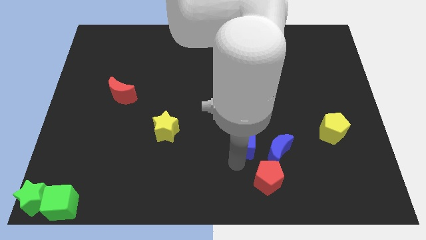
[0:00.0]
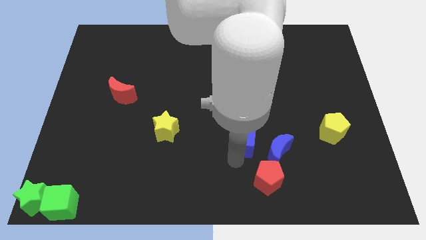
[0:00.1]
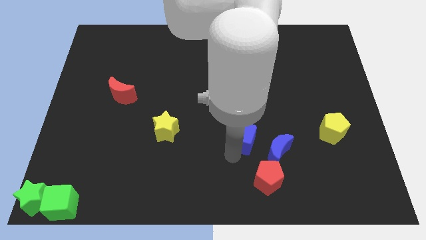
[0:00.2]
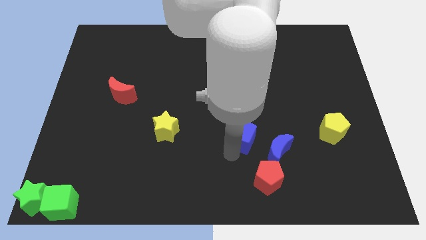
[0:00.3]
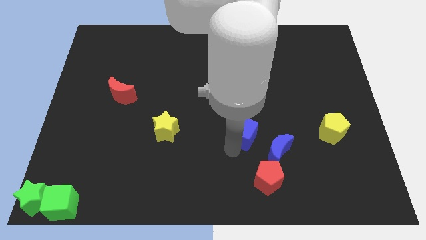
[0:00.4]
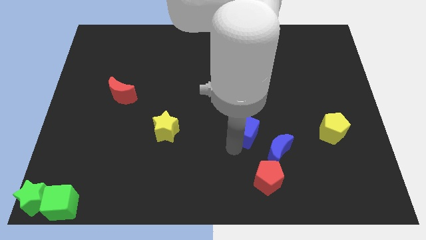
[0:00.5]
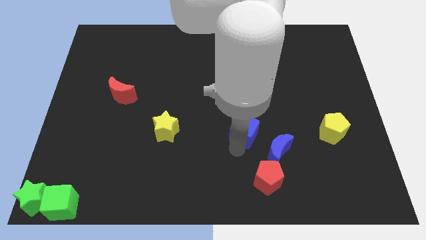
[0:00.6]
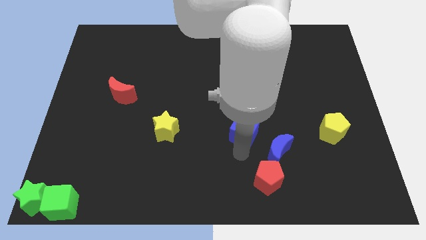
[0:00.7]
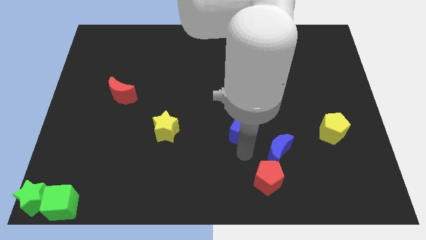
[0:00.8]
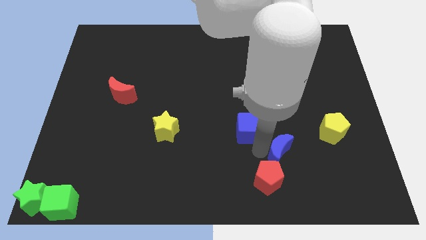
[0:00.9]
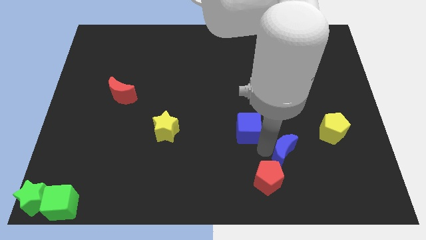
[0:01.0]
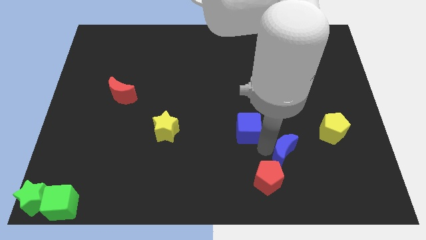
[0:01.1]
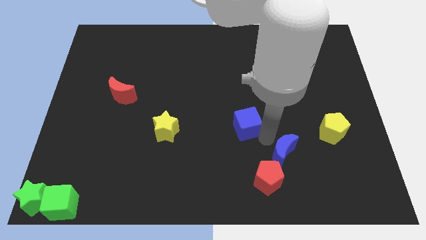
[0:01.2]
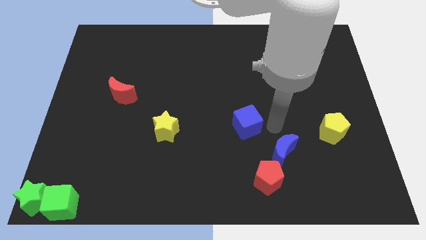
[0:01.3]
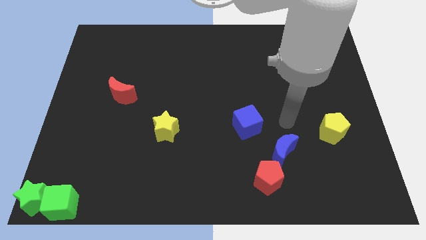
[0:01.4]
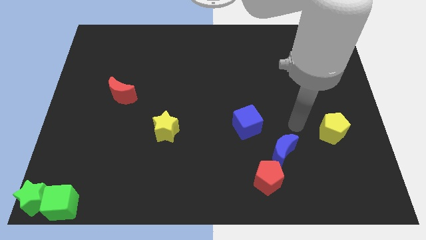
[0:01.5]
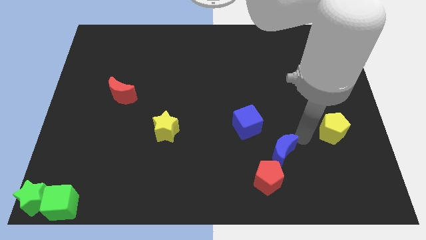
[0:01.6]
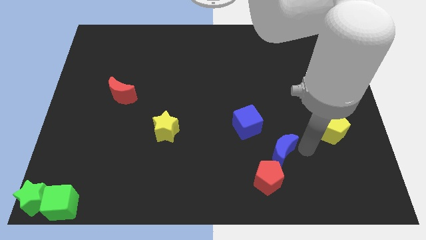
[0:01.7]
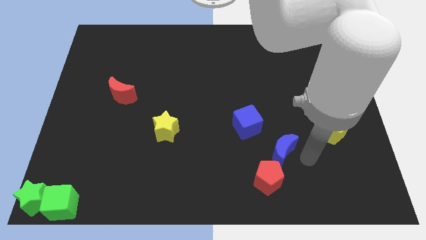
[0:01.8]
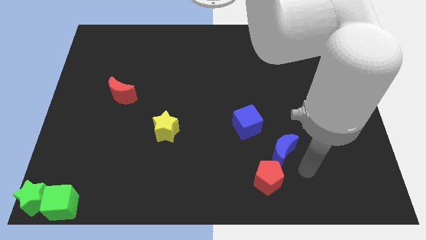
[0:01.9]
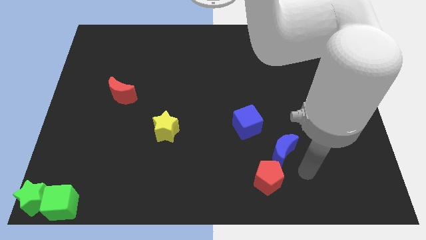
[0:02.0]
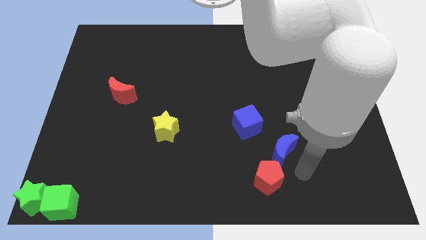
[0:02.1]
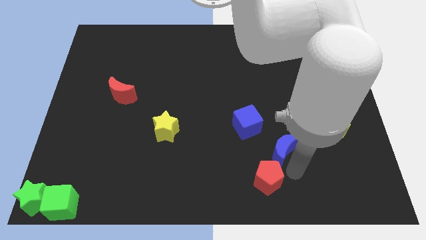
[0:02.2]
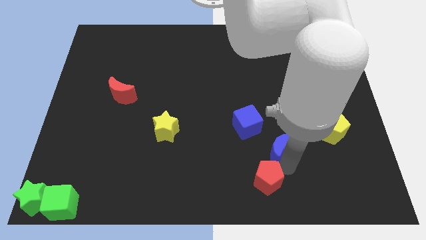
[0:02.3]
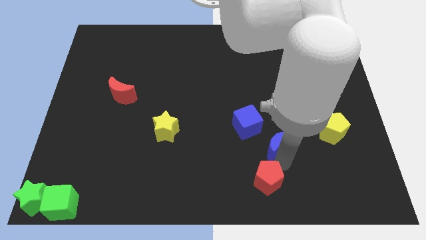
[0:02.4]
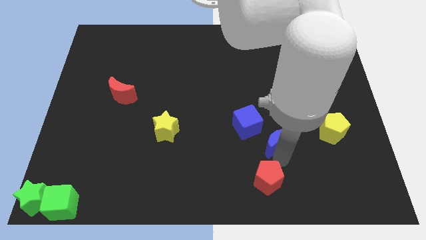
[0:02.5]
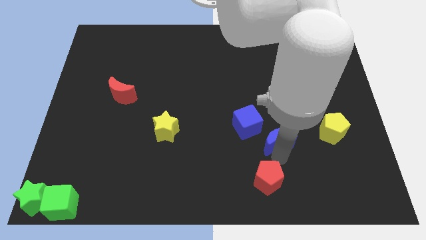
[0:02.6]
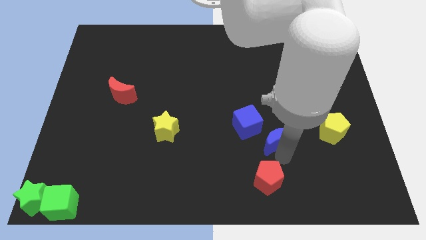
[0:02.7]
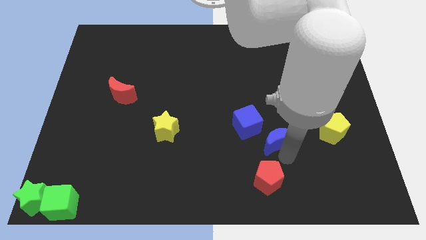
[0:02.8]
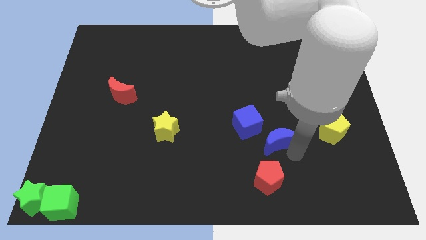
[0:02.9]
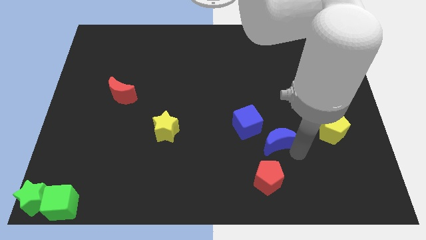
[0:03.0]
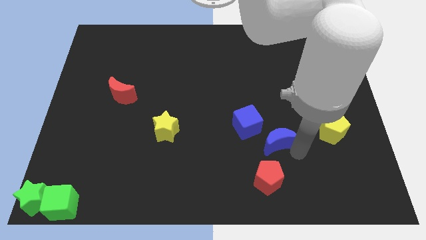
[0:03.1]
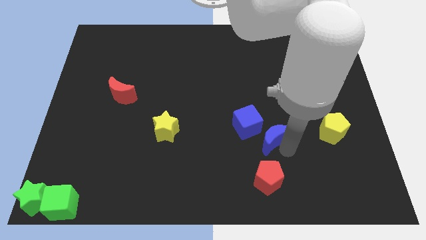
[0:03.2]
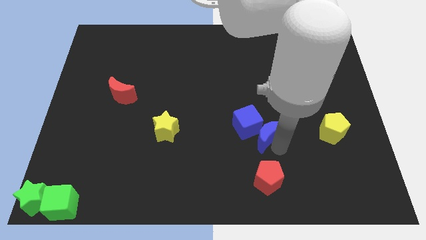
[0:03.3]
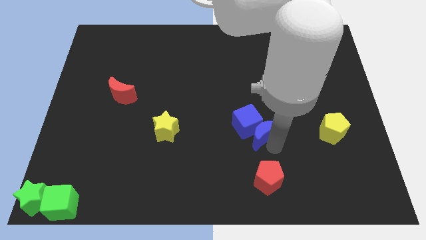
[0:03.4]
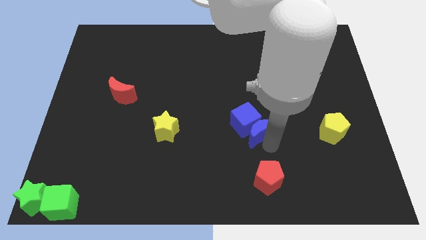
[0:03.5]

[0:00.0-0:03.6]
push blue crescent in to blue cube

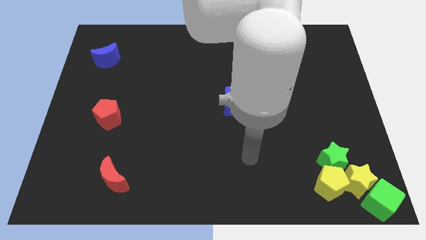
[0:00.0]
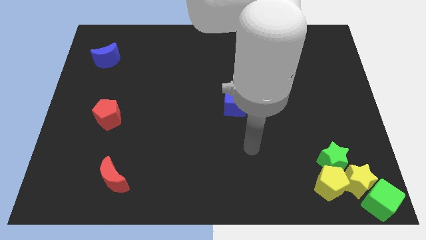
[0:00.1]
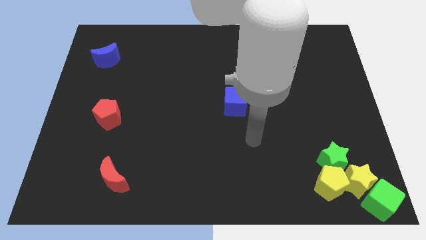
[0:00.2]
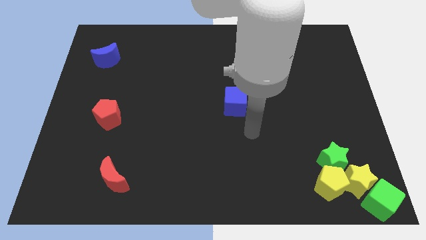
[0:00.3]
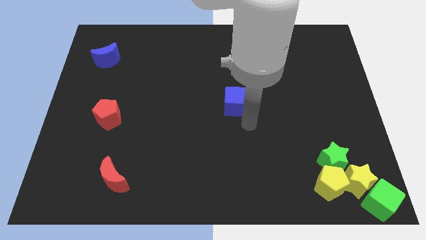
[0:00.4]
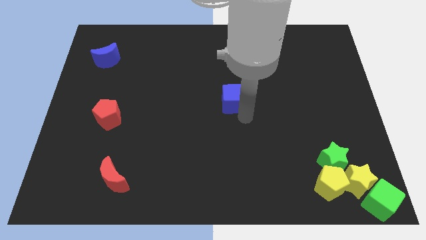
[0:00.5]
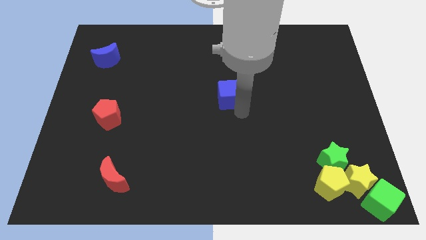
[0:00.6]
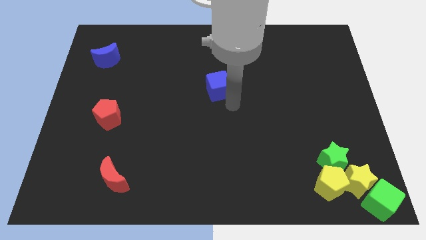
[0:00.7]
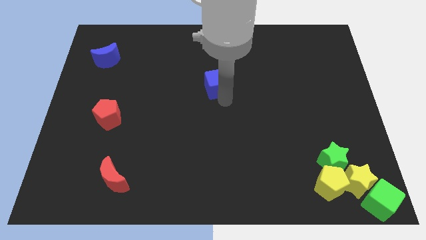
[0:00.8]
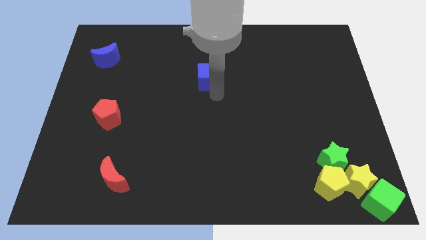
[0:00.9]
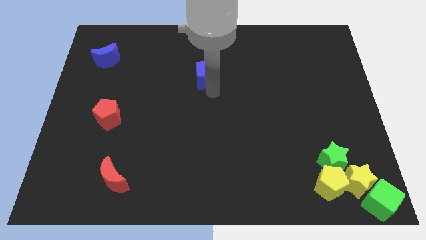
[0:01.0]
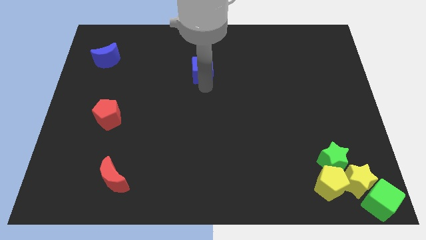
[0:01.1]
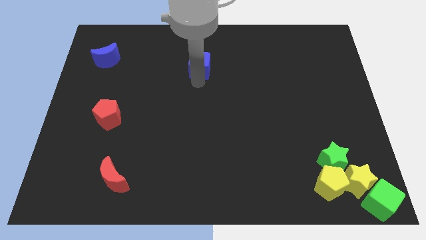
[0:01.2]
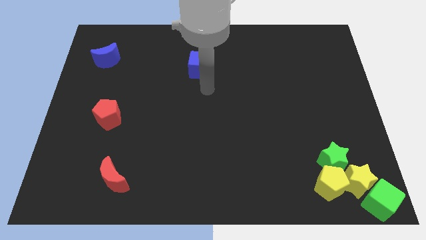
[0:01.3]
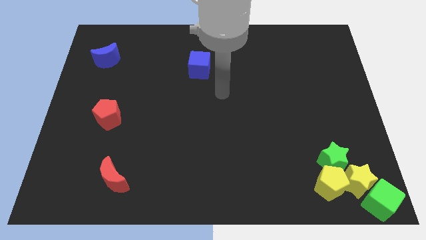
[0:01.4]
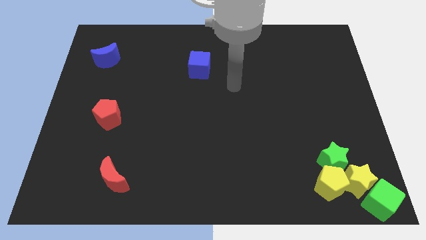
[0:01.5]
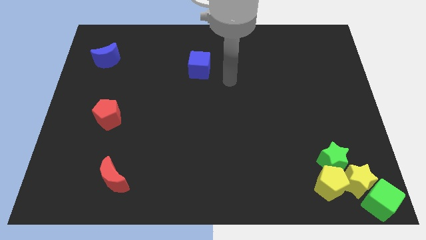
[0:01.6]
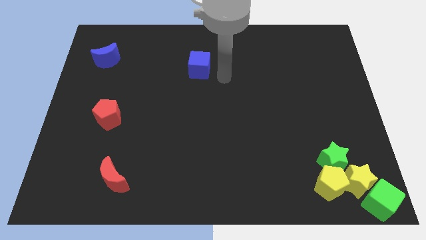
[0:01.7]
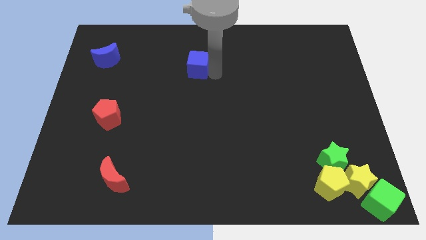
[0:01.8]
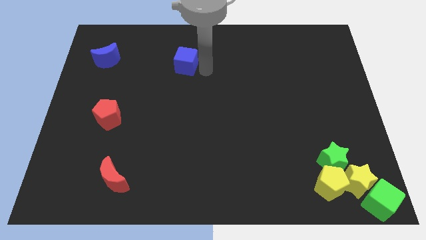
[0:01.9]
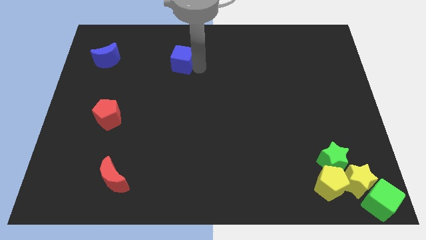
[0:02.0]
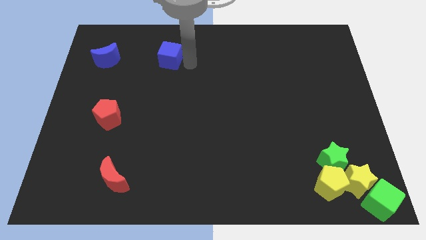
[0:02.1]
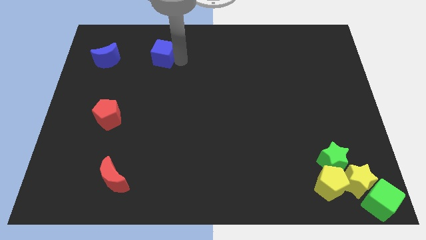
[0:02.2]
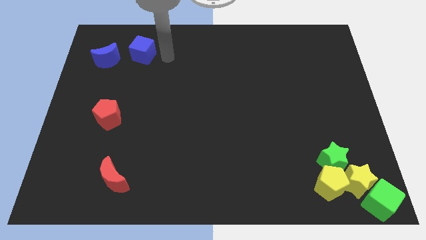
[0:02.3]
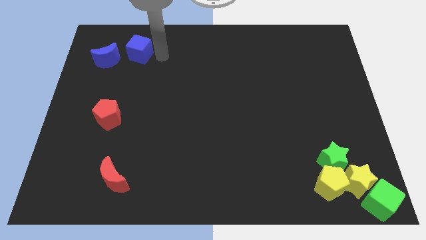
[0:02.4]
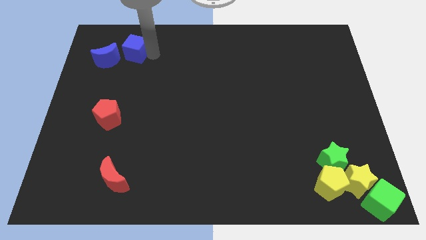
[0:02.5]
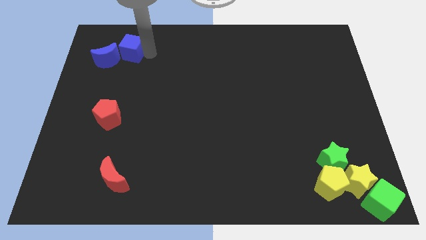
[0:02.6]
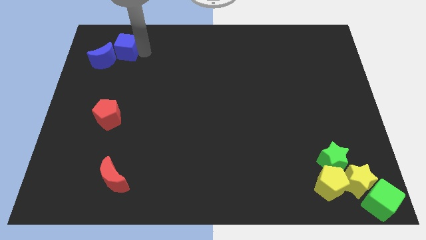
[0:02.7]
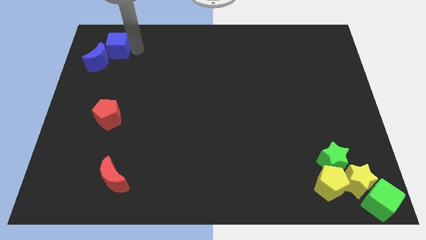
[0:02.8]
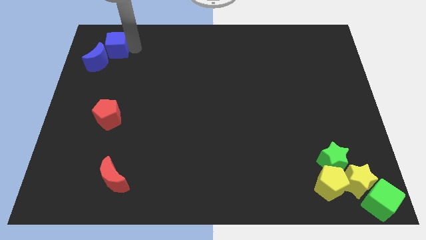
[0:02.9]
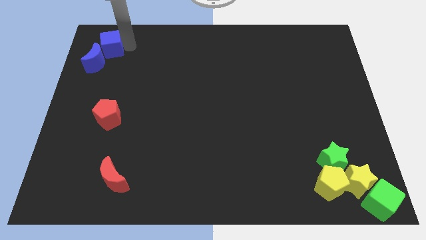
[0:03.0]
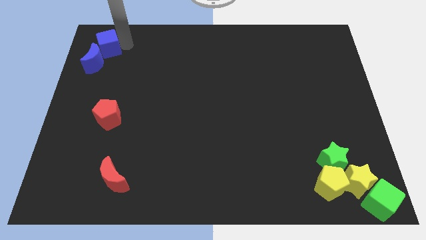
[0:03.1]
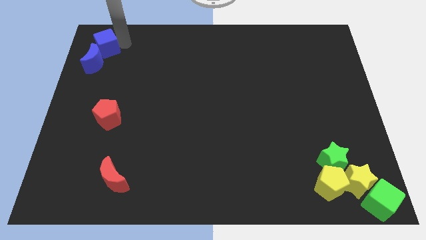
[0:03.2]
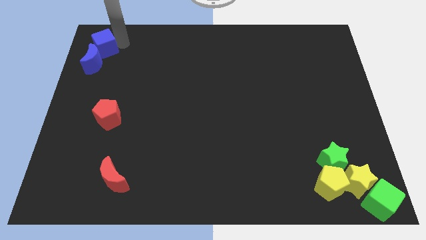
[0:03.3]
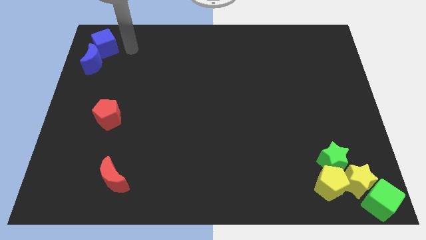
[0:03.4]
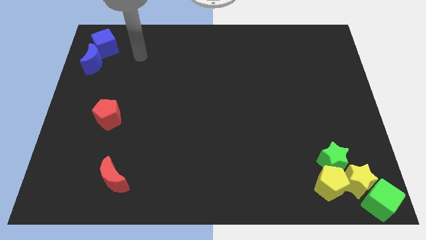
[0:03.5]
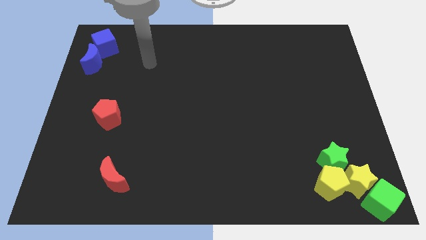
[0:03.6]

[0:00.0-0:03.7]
push the blue cube above the blue crescent

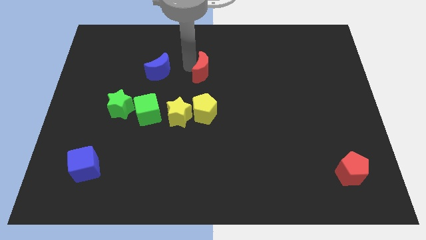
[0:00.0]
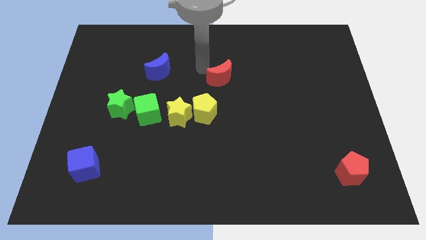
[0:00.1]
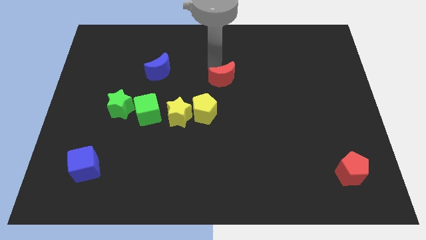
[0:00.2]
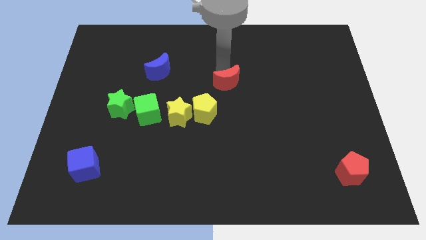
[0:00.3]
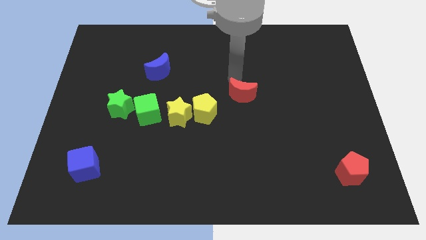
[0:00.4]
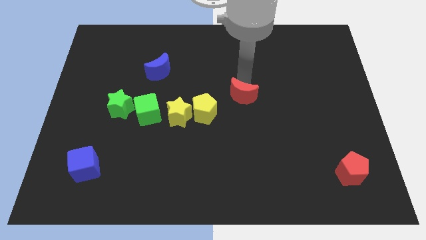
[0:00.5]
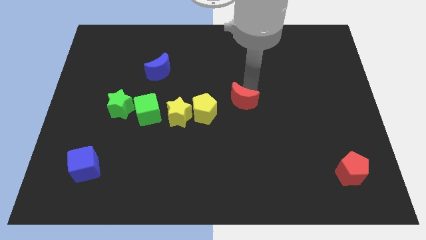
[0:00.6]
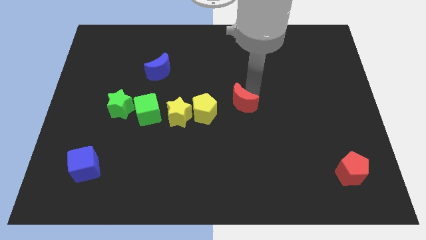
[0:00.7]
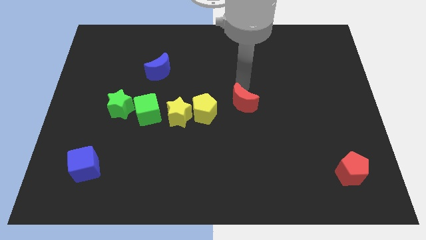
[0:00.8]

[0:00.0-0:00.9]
move the red crescent right to the yellow pentagon

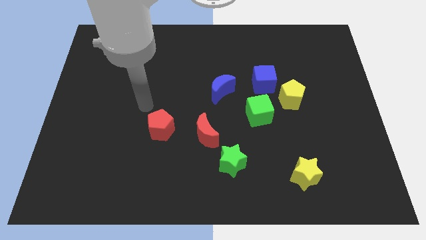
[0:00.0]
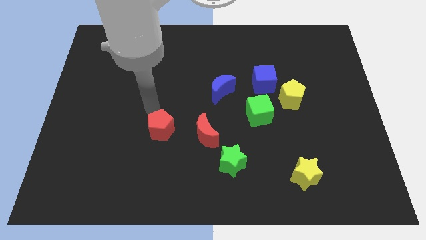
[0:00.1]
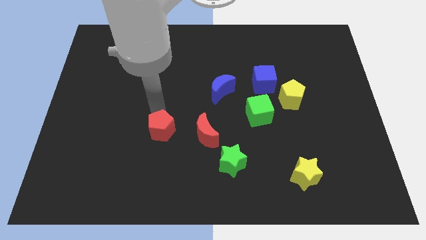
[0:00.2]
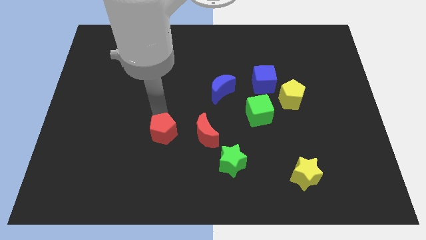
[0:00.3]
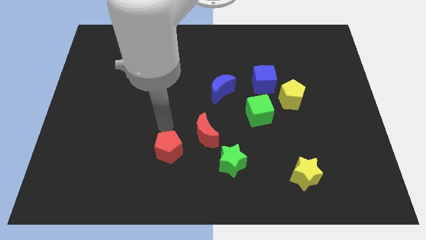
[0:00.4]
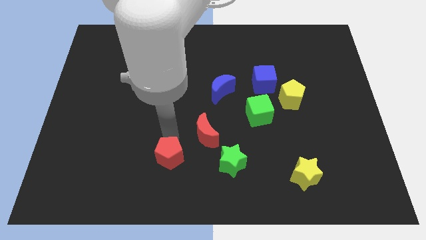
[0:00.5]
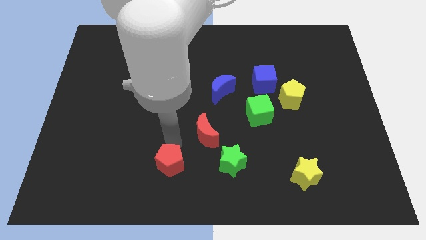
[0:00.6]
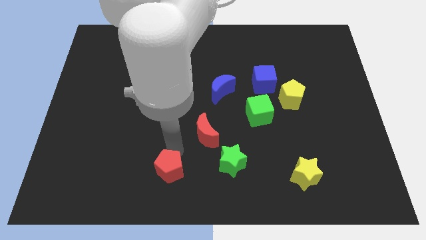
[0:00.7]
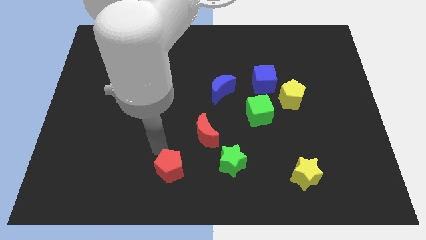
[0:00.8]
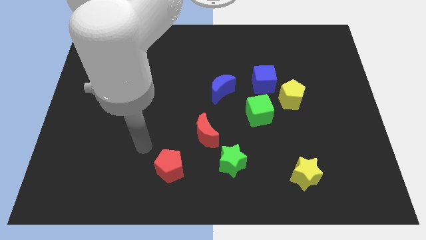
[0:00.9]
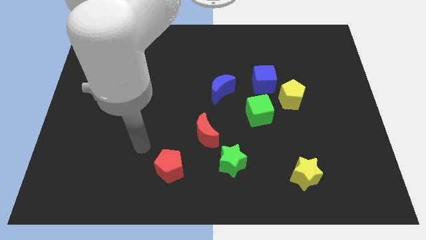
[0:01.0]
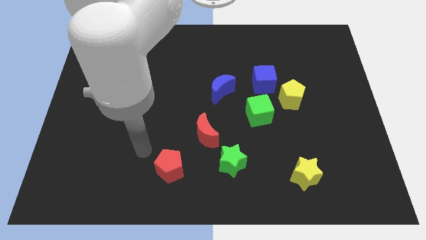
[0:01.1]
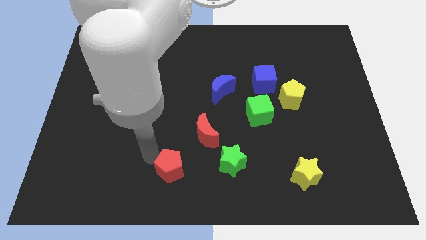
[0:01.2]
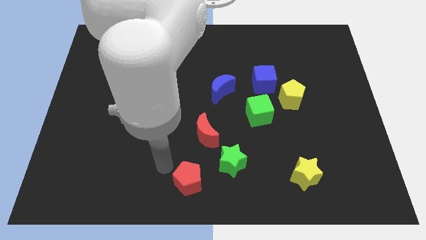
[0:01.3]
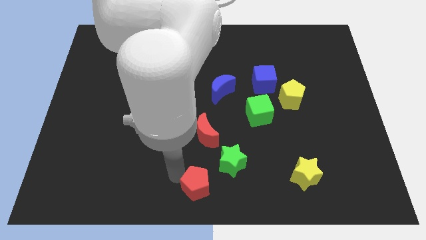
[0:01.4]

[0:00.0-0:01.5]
slide the red pentagon diagonally bottom left to the green star
